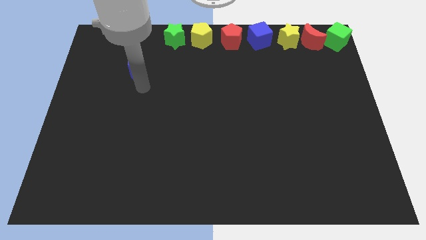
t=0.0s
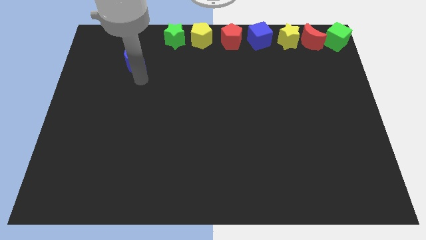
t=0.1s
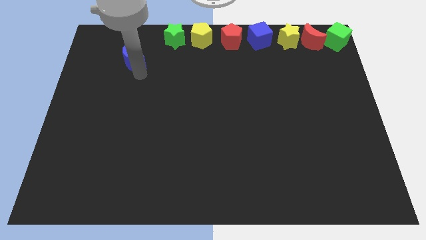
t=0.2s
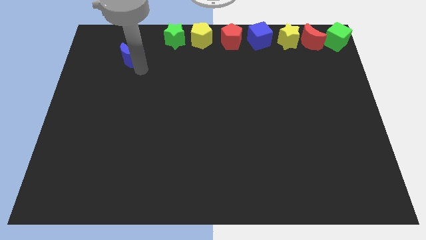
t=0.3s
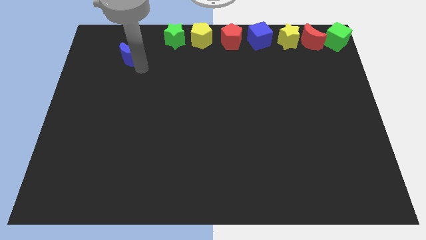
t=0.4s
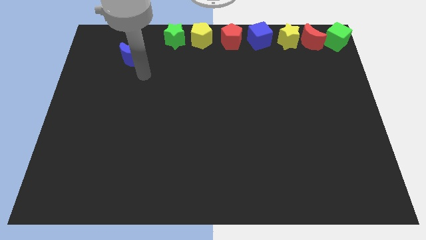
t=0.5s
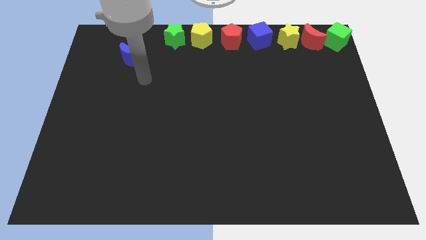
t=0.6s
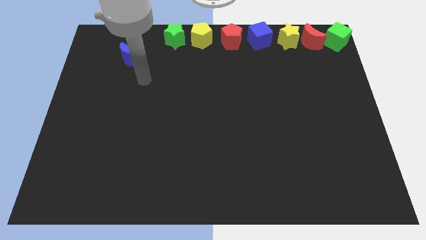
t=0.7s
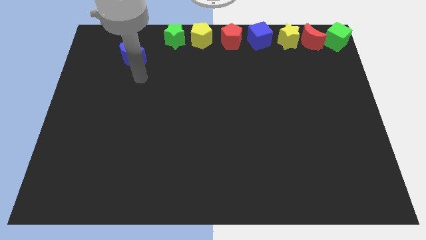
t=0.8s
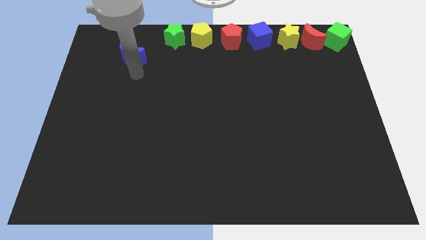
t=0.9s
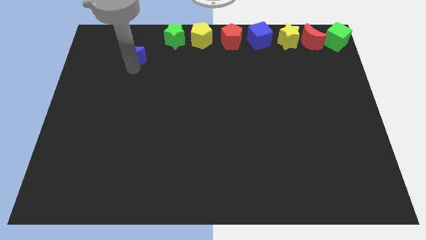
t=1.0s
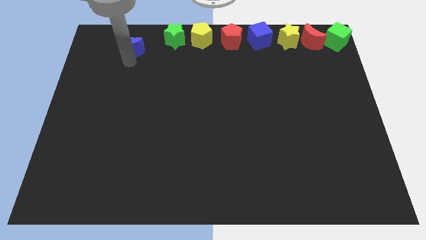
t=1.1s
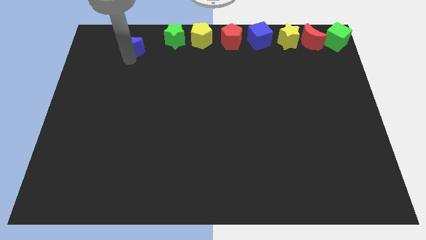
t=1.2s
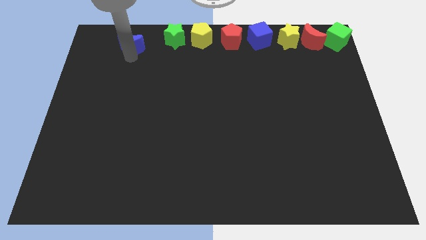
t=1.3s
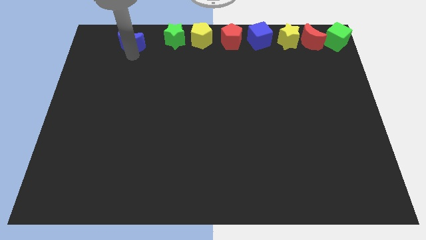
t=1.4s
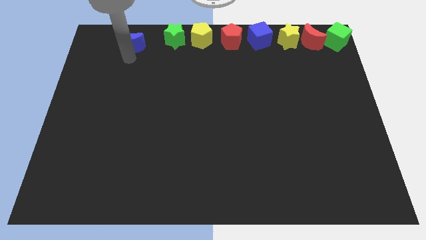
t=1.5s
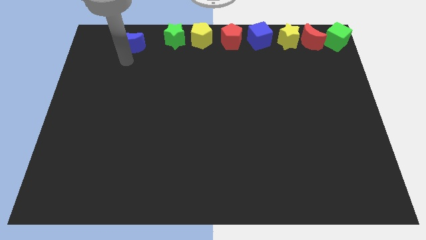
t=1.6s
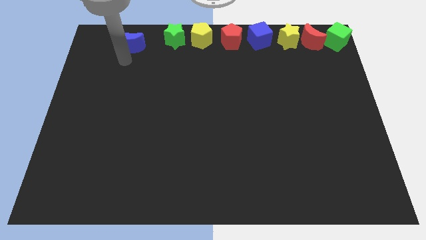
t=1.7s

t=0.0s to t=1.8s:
push the blue crescent to the left of the green star

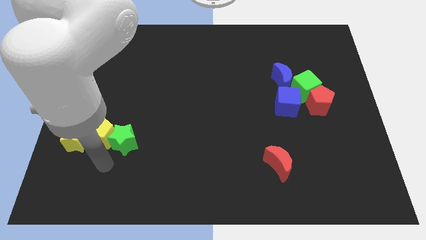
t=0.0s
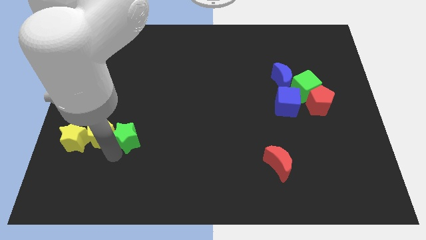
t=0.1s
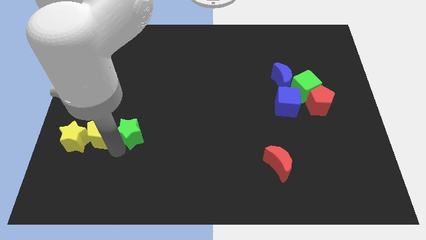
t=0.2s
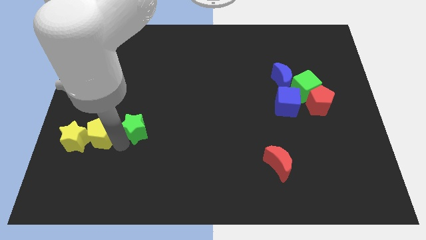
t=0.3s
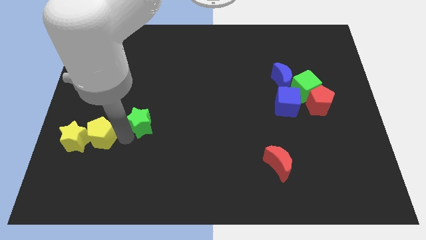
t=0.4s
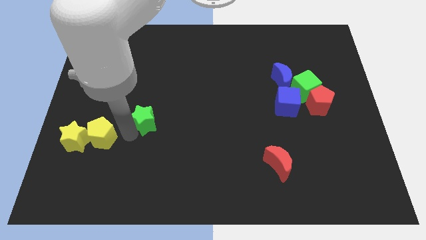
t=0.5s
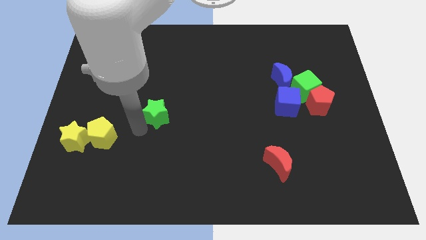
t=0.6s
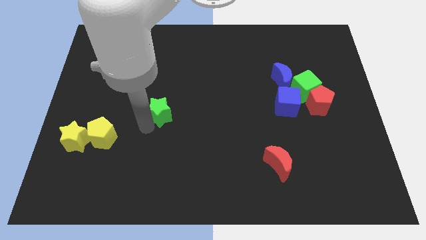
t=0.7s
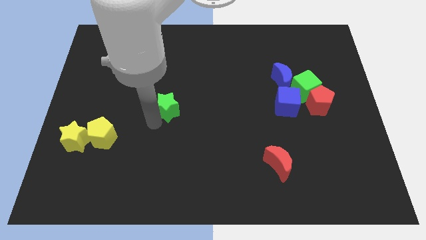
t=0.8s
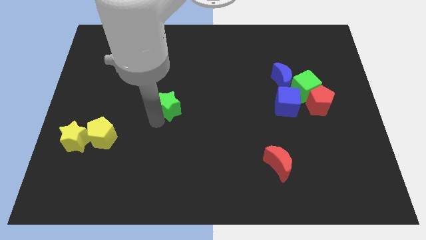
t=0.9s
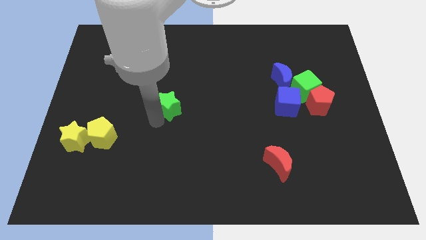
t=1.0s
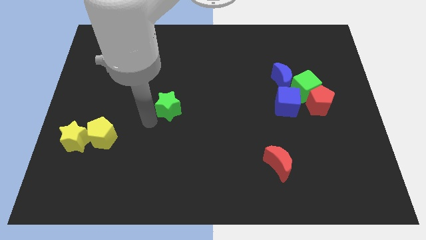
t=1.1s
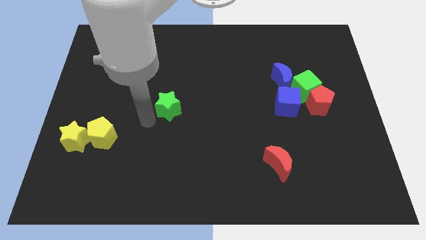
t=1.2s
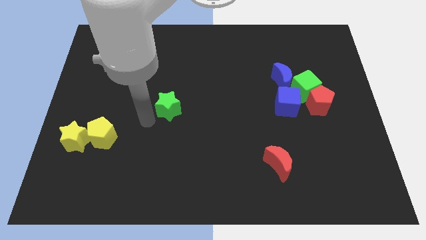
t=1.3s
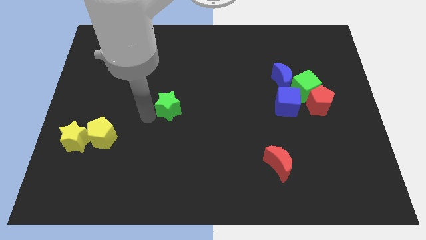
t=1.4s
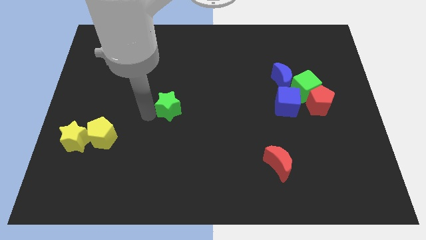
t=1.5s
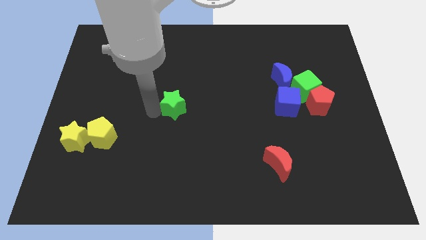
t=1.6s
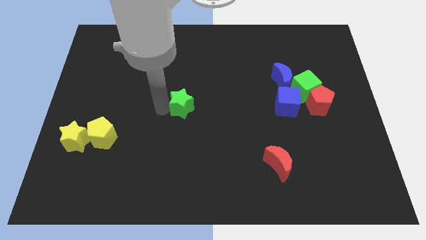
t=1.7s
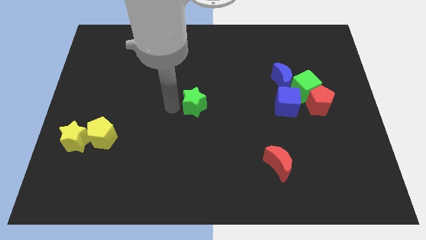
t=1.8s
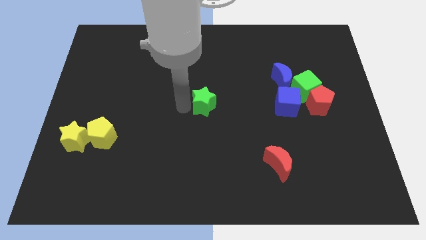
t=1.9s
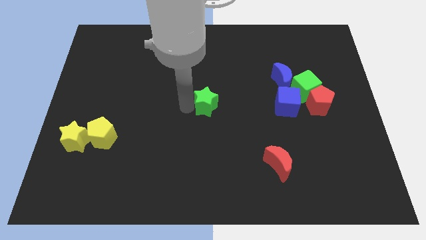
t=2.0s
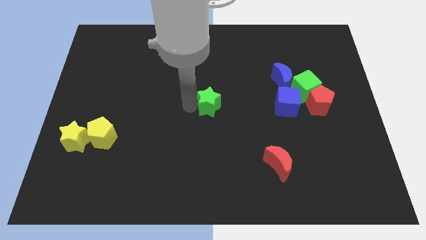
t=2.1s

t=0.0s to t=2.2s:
place the green star at the center of the board

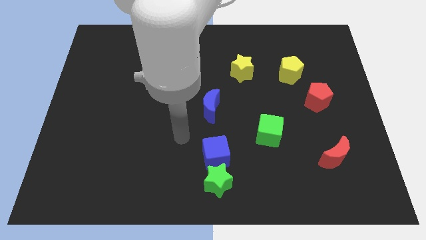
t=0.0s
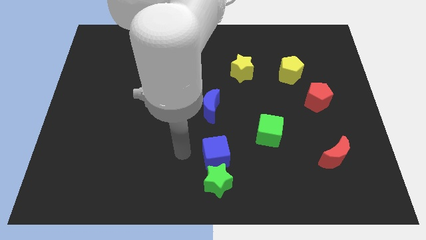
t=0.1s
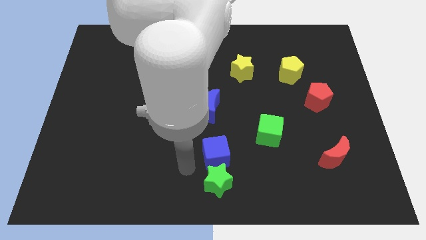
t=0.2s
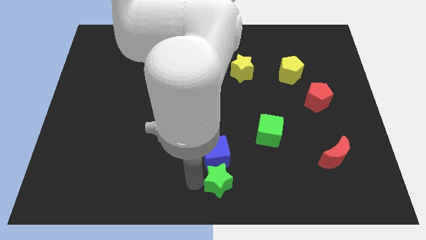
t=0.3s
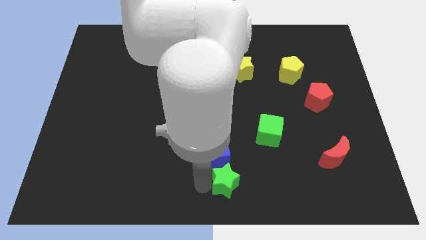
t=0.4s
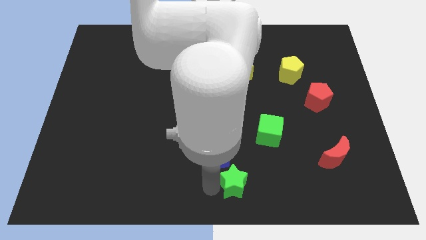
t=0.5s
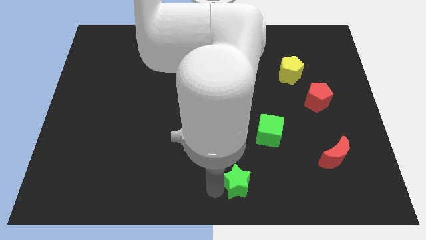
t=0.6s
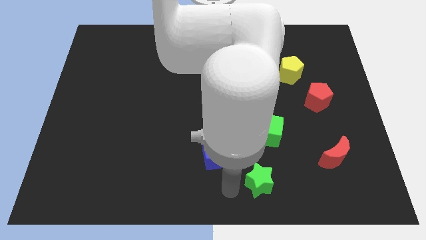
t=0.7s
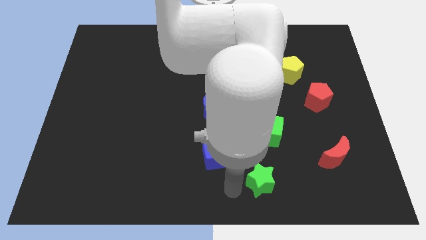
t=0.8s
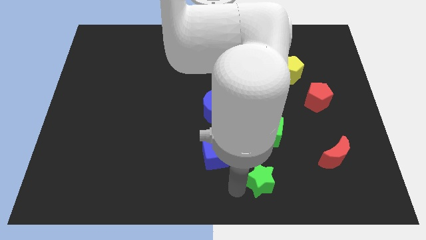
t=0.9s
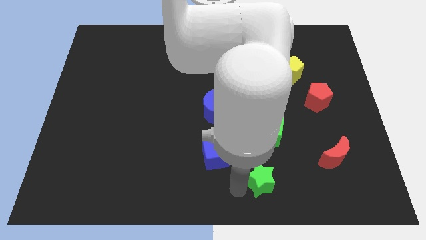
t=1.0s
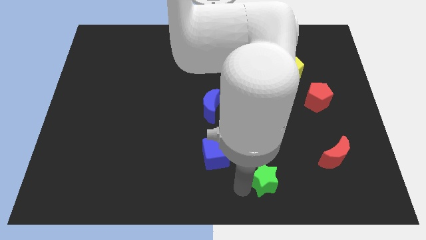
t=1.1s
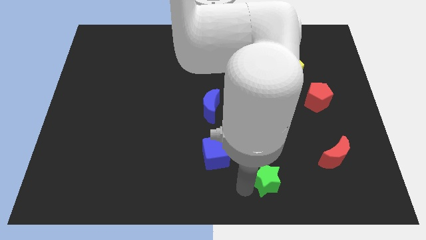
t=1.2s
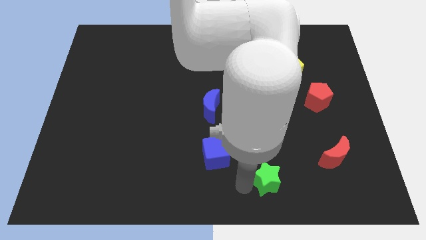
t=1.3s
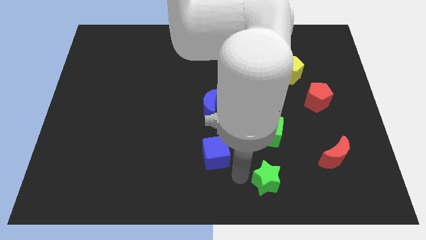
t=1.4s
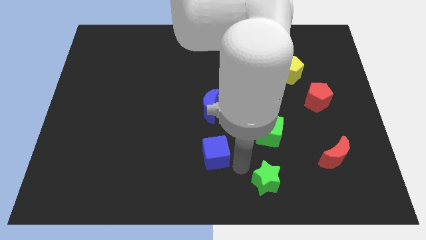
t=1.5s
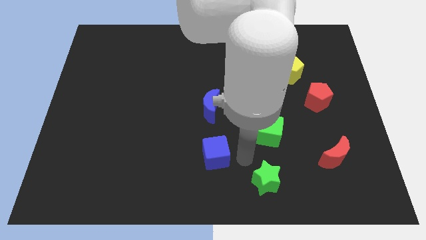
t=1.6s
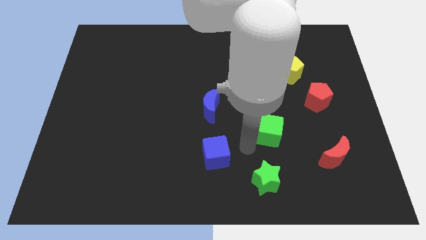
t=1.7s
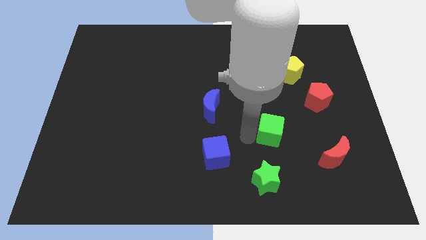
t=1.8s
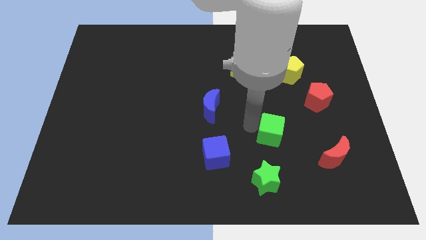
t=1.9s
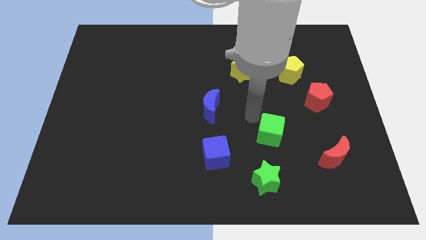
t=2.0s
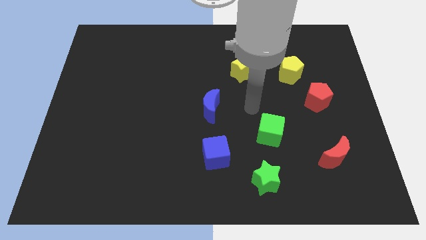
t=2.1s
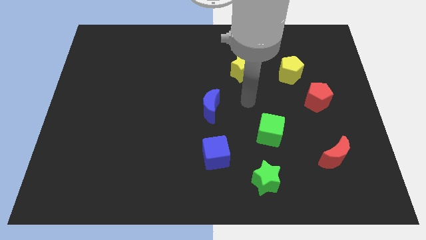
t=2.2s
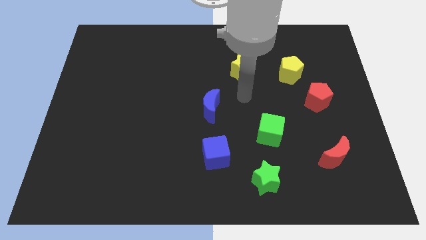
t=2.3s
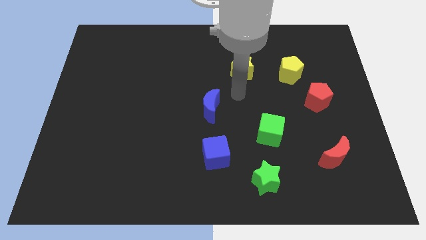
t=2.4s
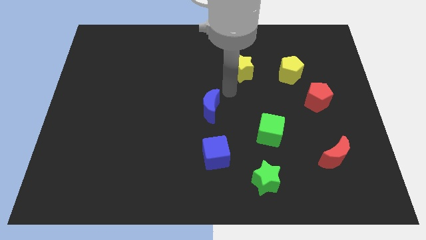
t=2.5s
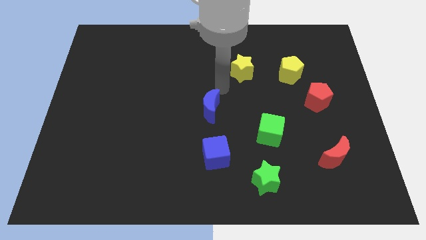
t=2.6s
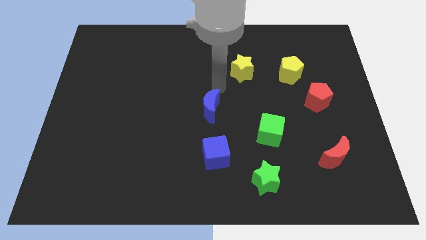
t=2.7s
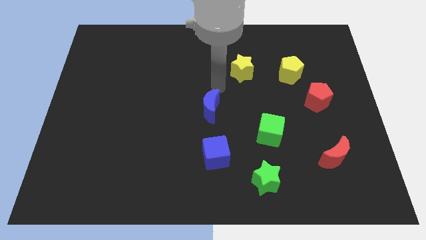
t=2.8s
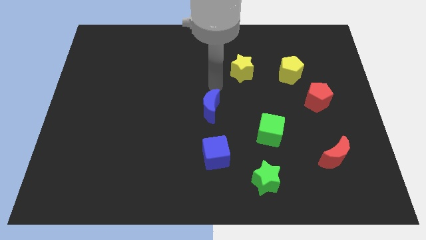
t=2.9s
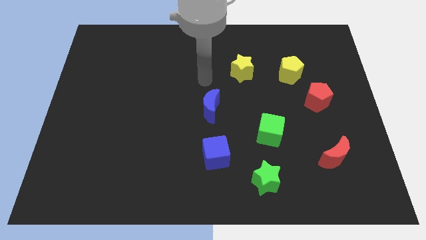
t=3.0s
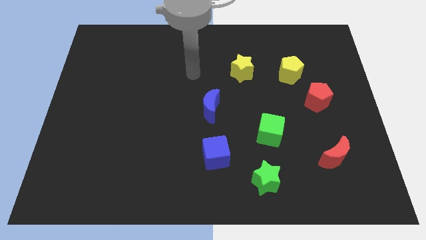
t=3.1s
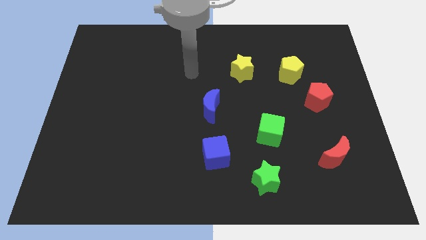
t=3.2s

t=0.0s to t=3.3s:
separate the green star from the blue cube

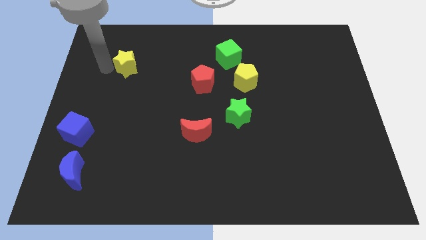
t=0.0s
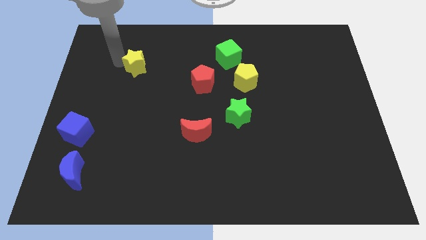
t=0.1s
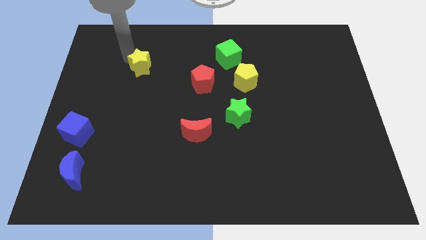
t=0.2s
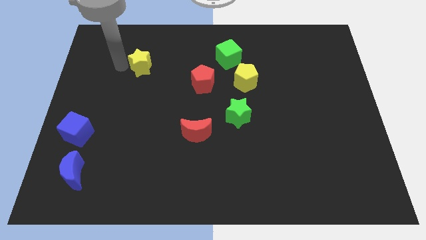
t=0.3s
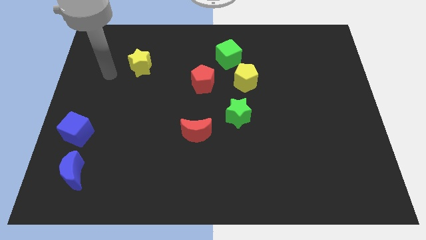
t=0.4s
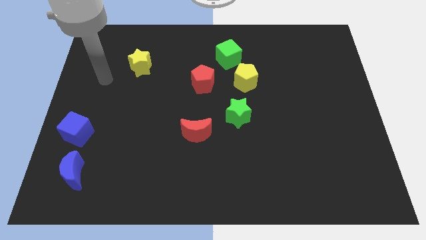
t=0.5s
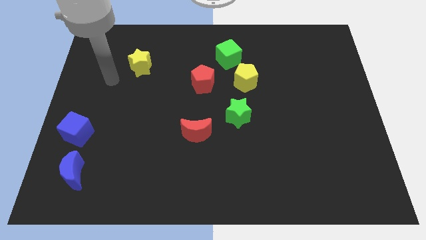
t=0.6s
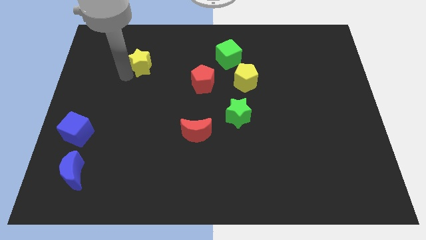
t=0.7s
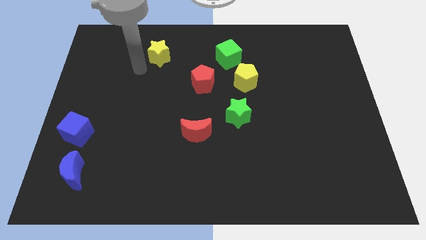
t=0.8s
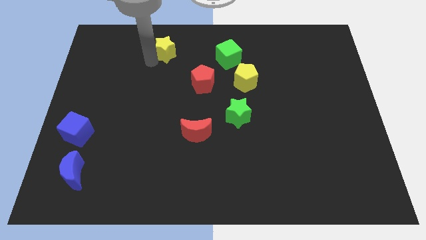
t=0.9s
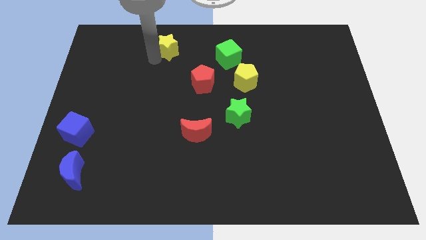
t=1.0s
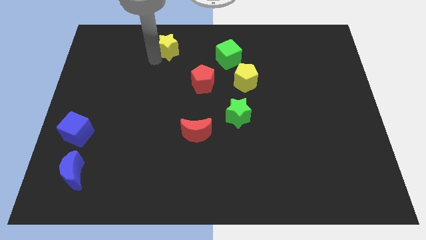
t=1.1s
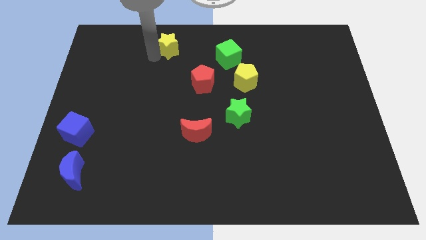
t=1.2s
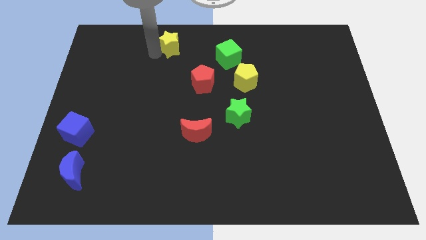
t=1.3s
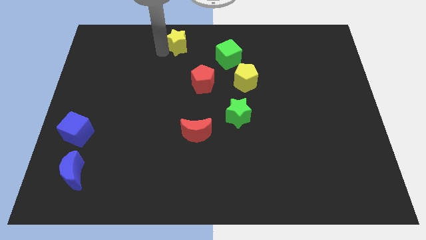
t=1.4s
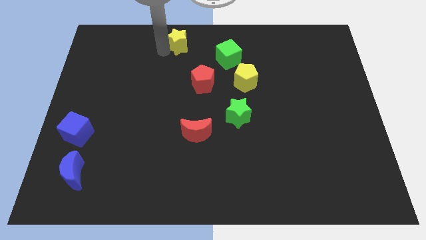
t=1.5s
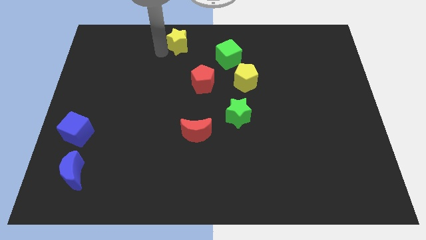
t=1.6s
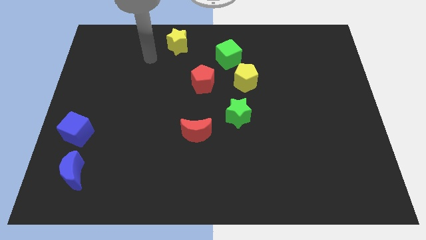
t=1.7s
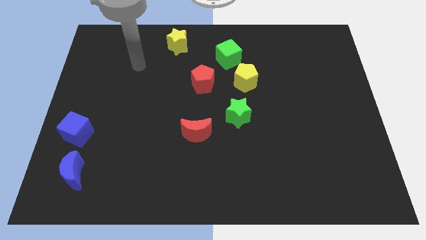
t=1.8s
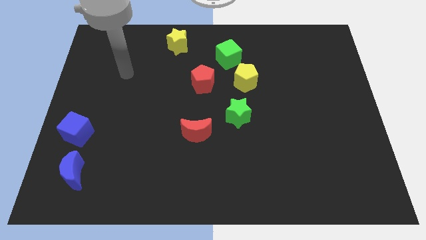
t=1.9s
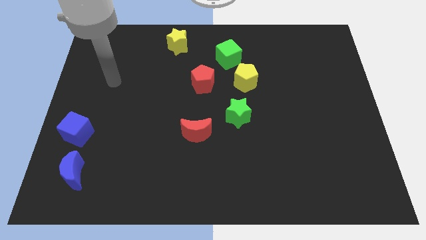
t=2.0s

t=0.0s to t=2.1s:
move the yellow star to the top center of the board
